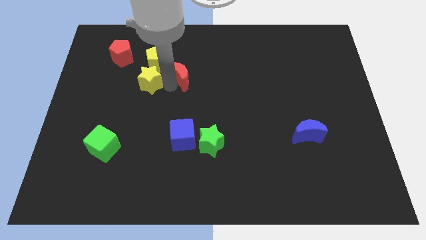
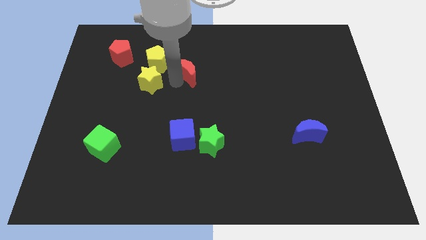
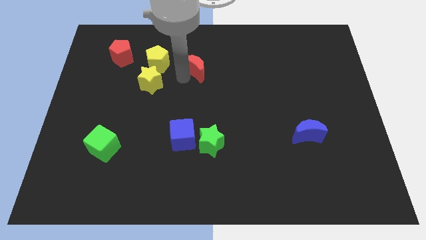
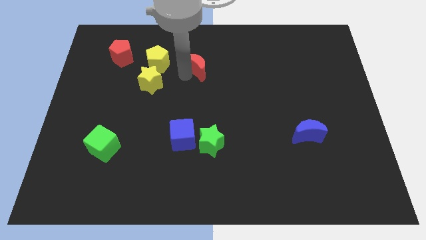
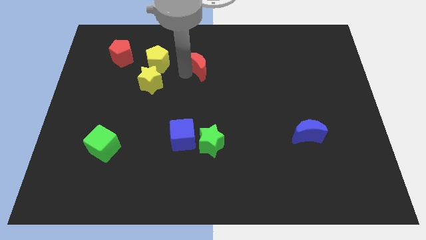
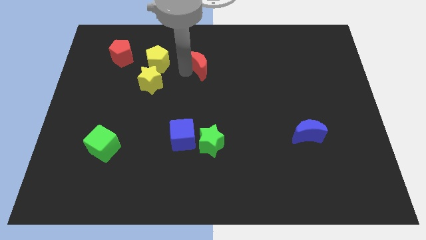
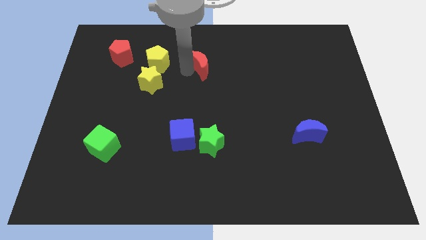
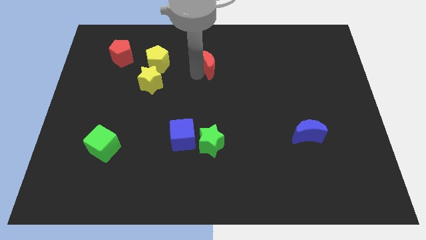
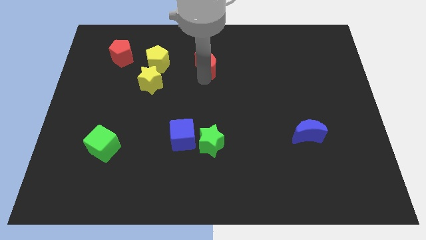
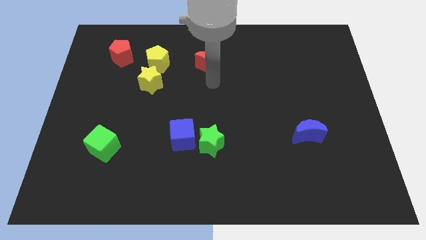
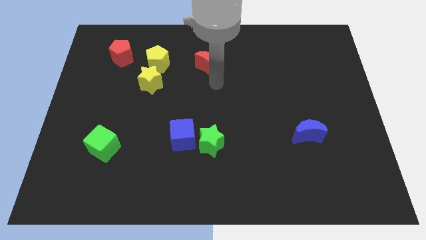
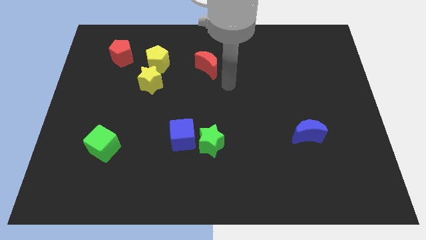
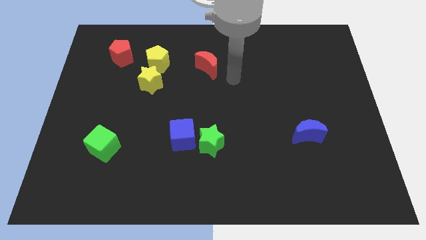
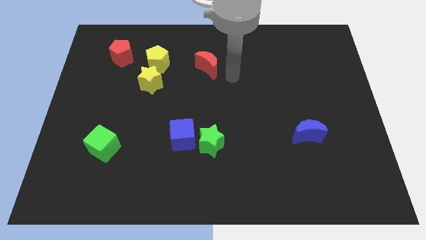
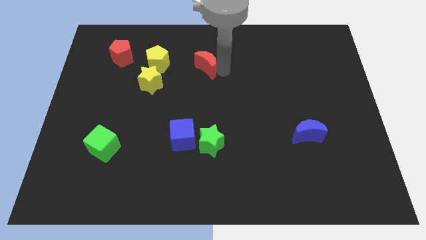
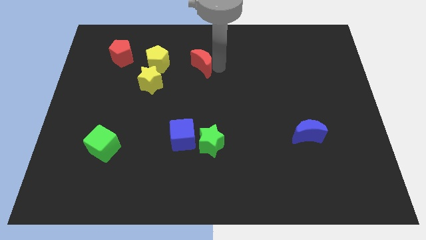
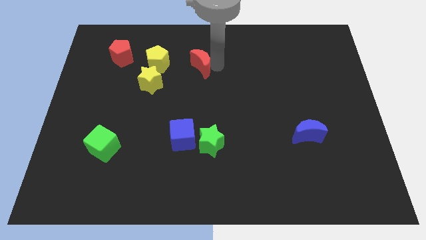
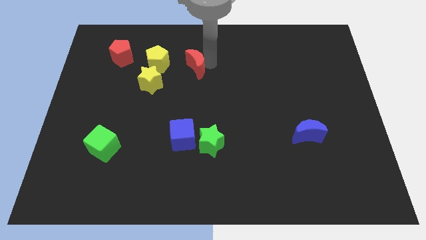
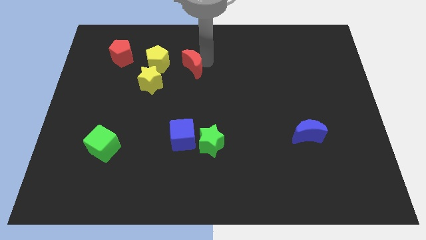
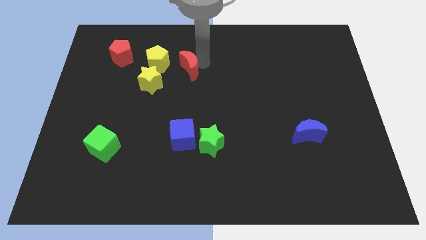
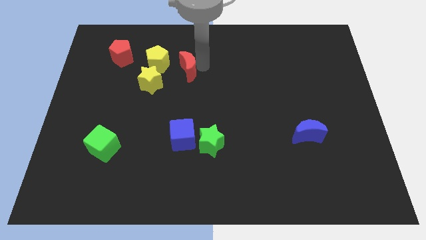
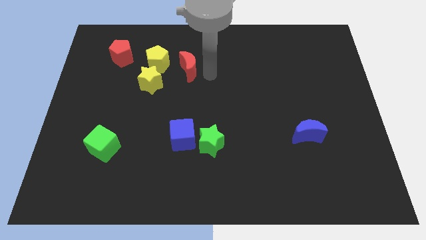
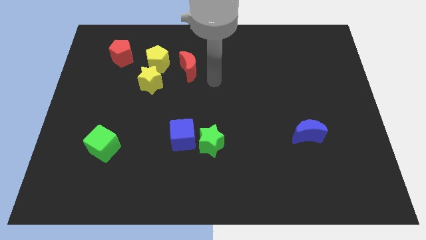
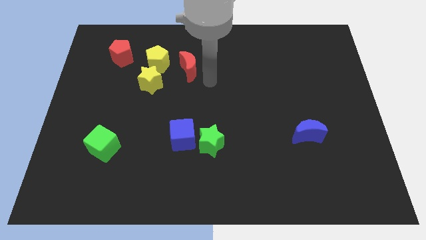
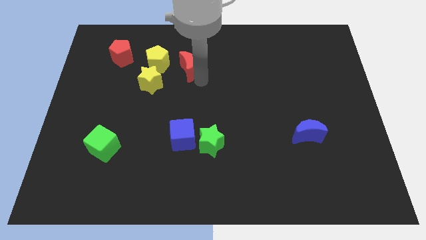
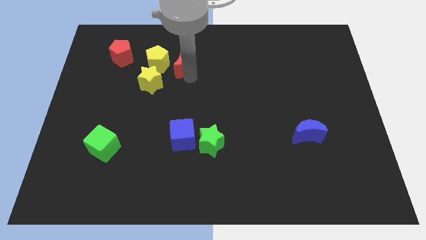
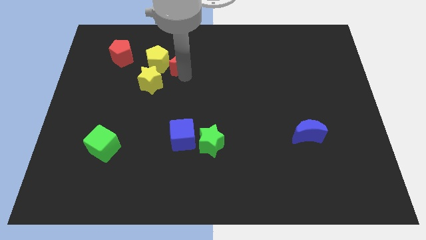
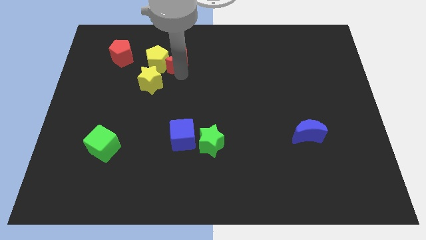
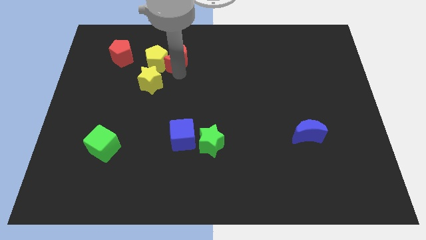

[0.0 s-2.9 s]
place the red moon right to the yellow pentagon

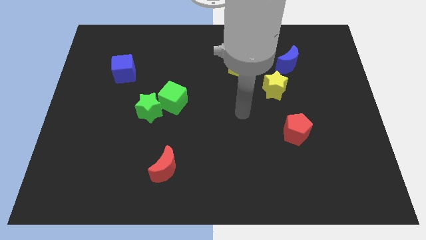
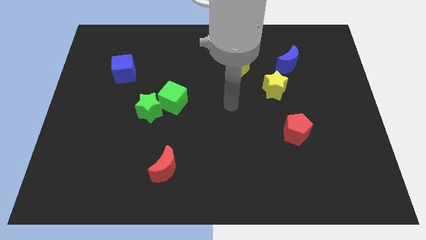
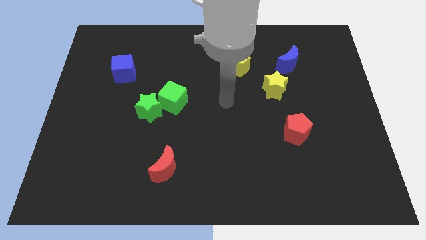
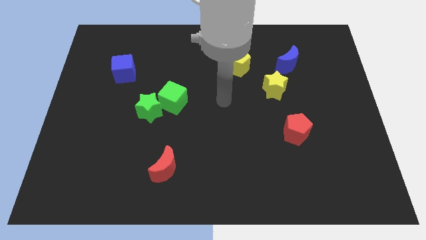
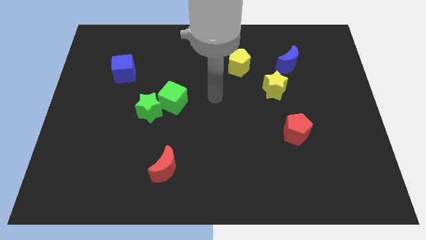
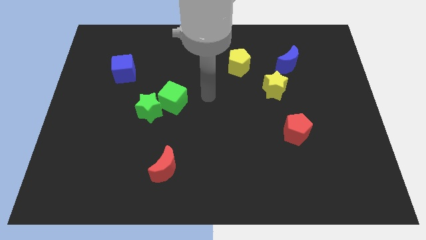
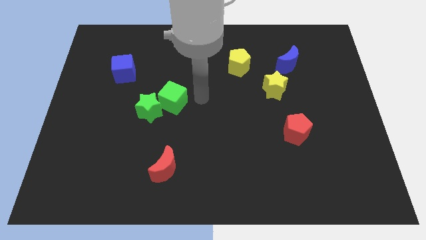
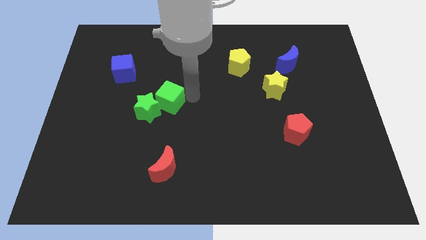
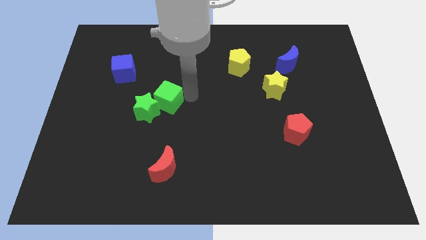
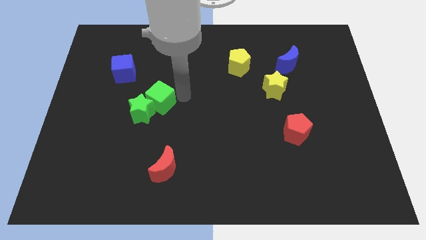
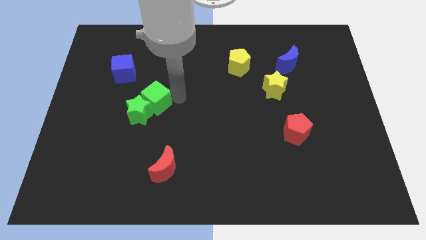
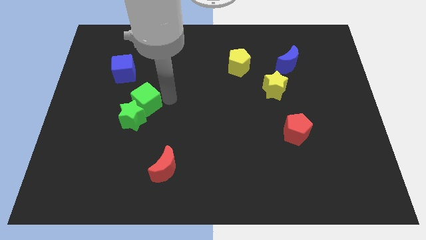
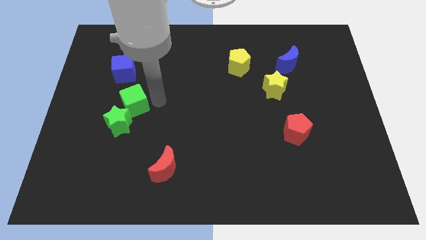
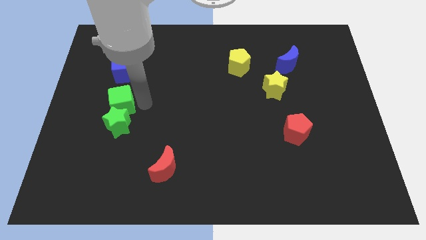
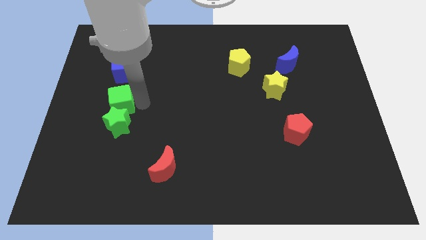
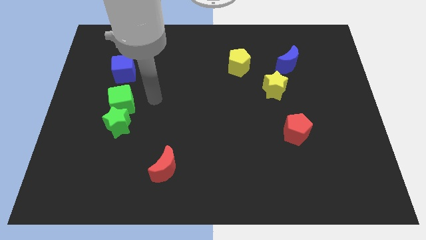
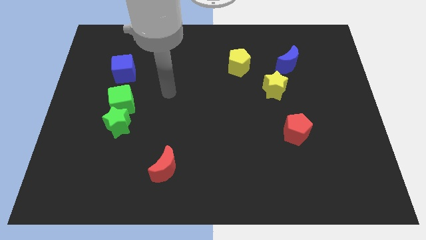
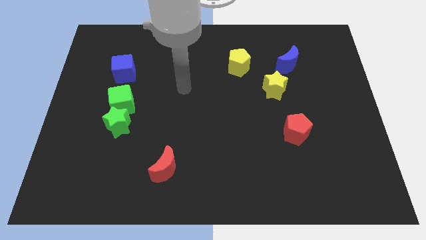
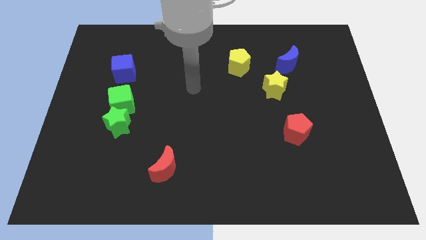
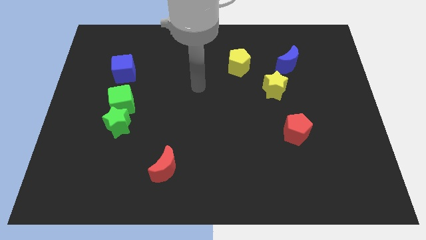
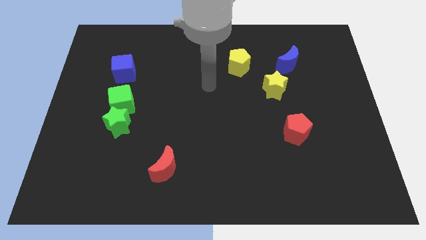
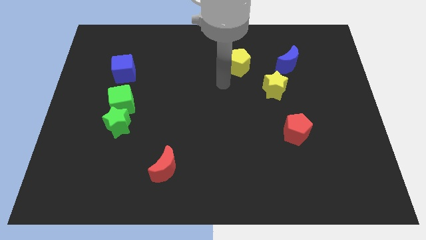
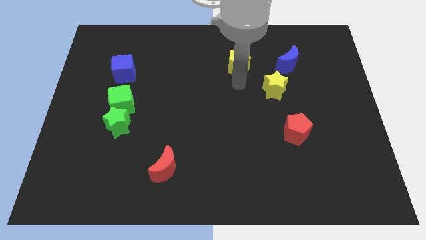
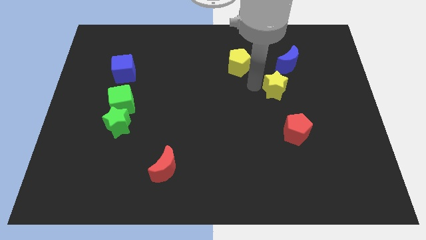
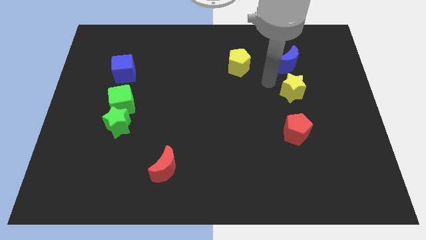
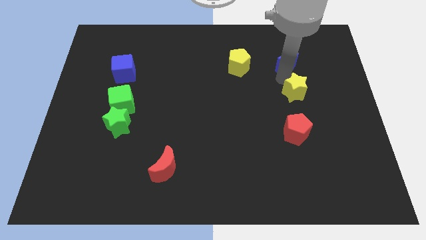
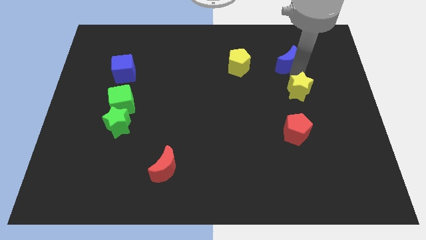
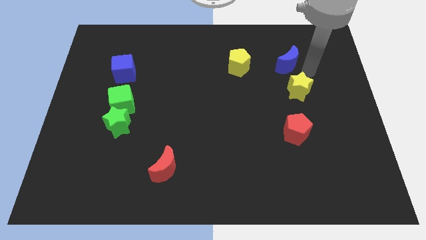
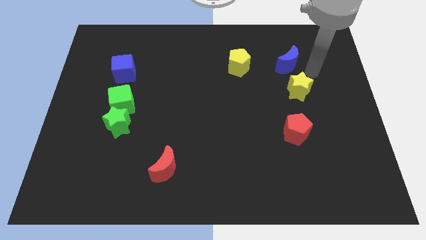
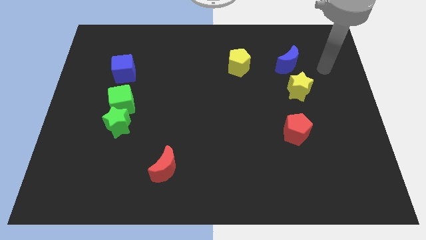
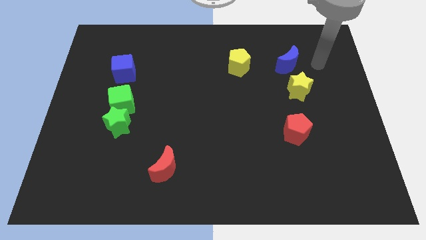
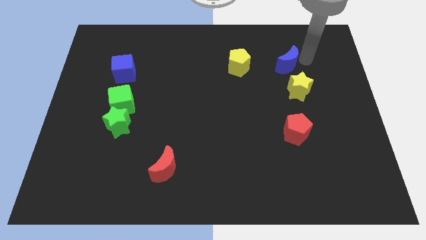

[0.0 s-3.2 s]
place the green cube and green star to the bottom of the blue cube

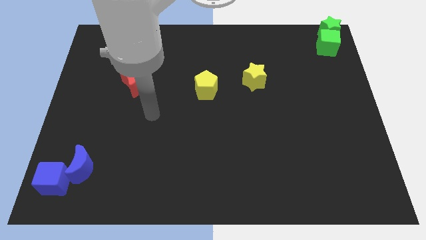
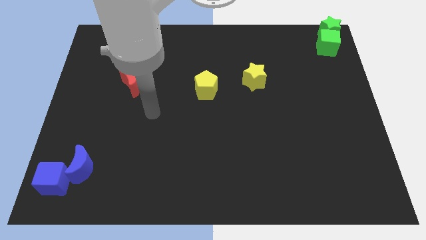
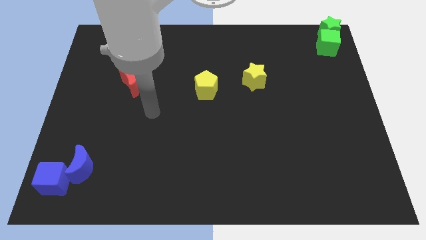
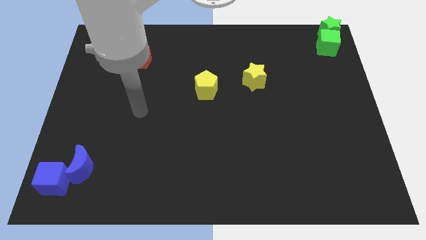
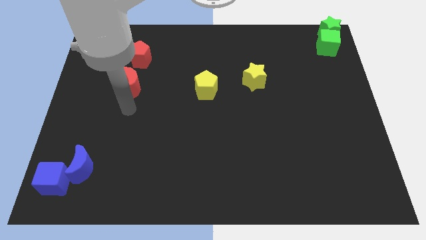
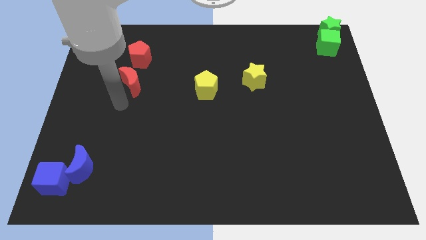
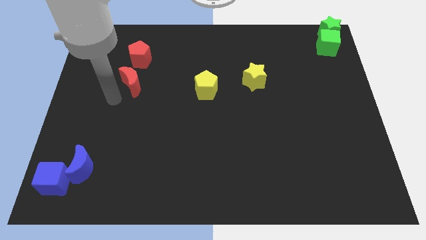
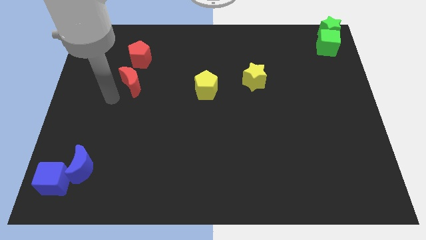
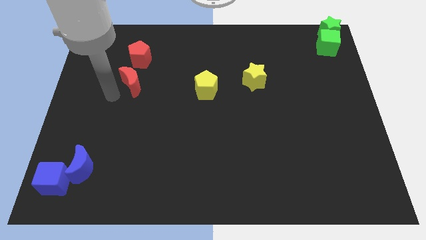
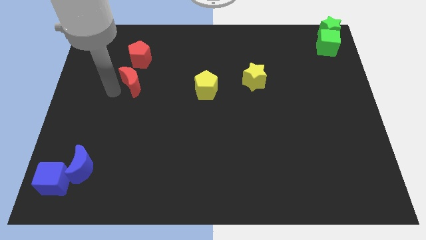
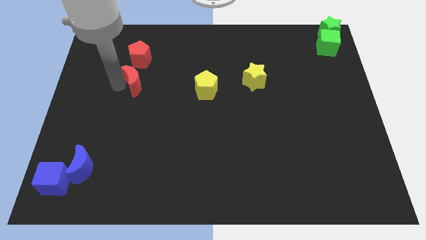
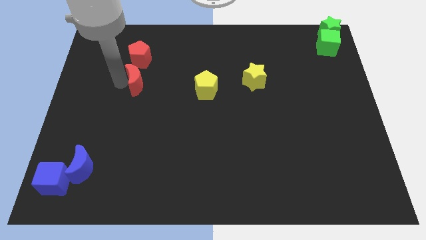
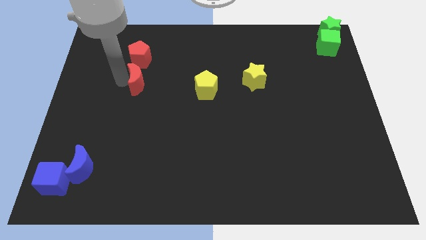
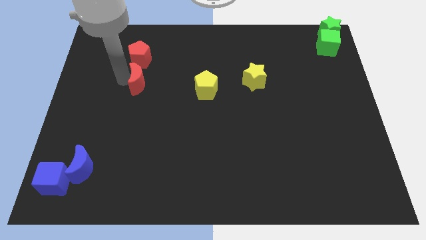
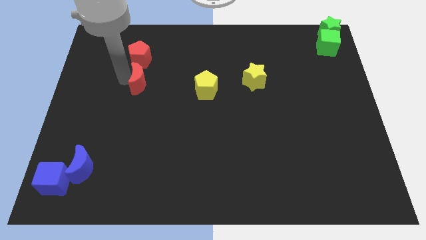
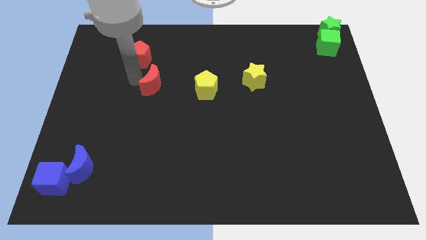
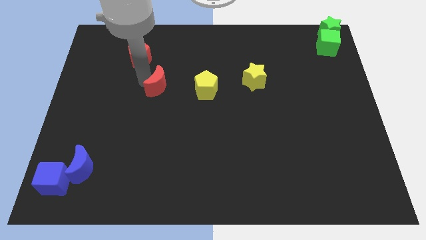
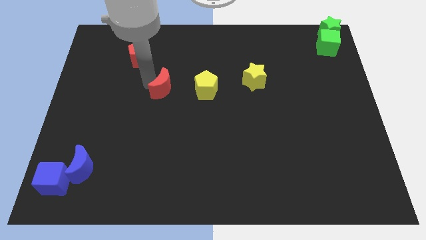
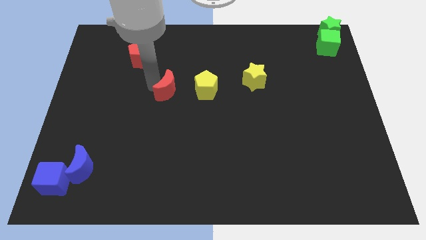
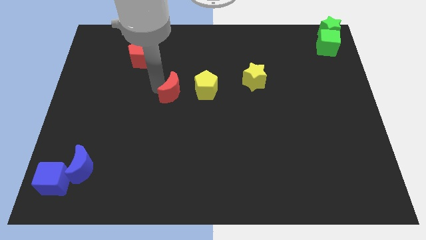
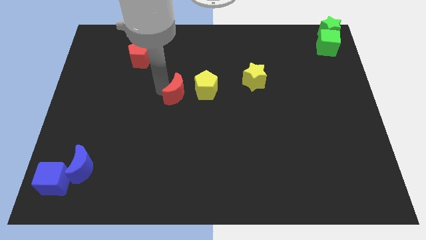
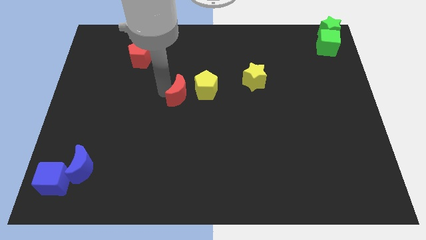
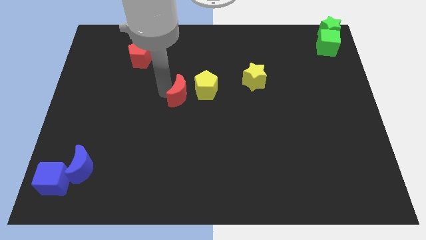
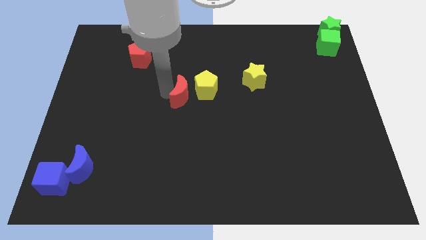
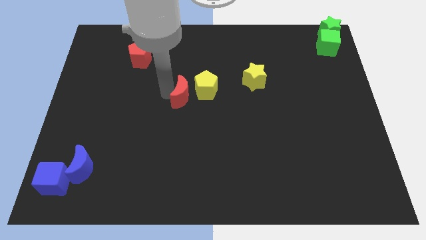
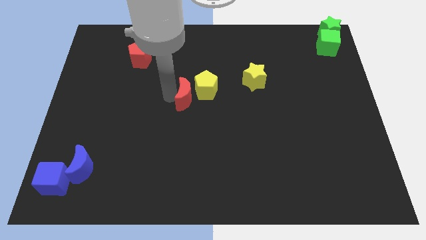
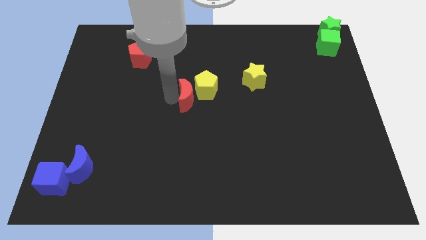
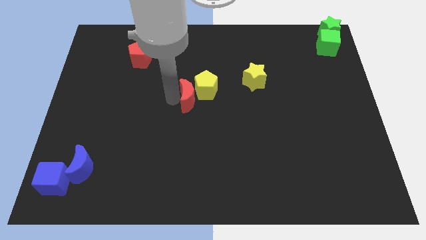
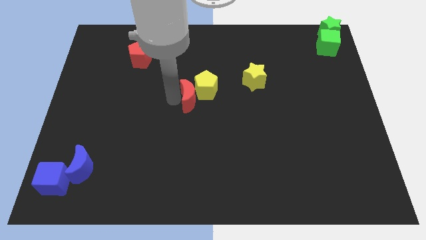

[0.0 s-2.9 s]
place the red moon at the bottom left side of yellow pentagon
